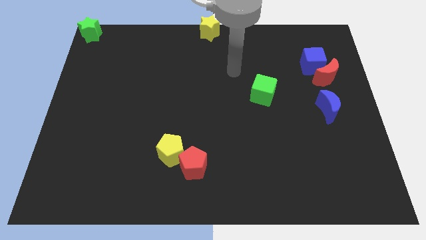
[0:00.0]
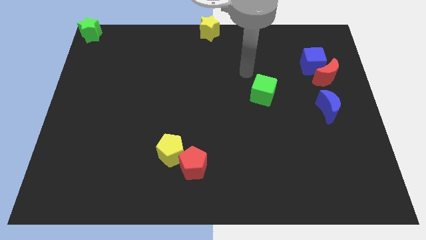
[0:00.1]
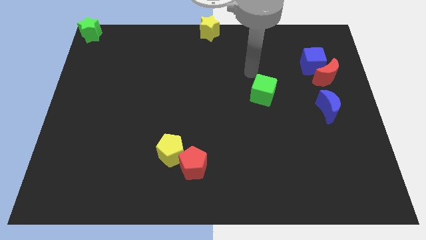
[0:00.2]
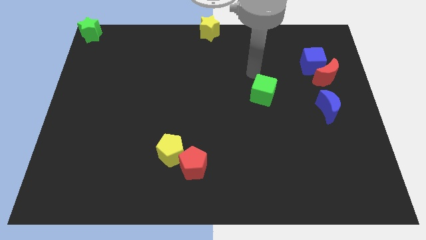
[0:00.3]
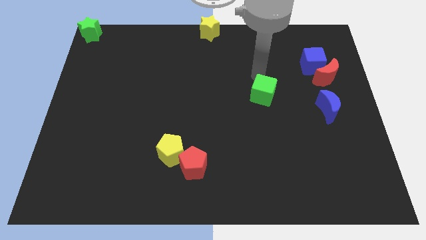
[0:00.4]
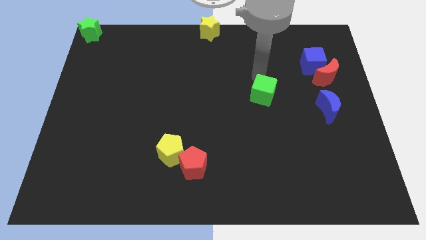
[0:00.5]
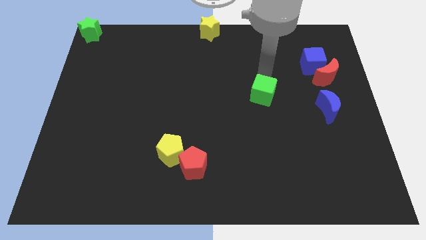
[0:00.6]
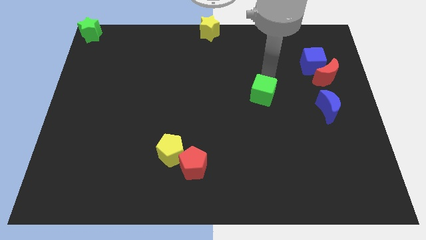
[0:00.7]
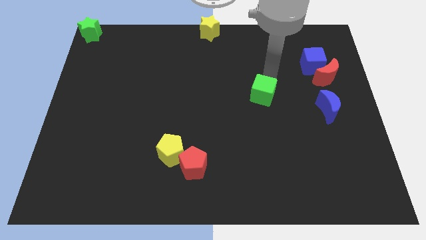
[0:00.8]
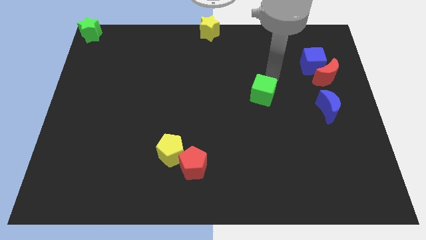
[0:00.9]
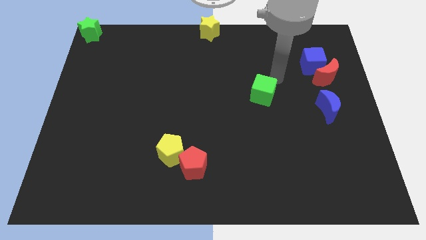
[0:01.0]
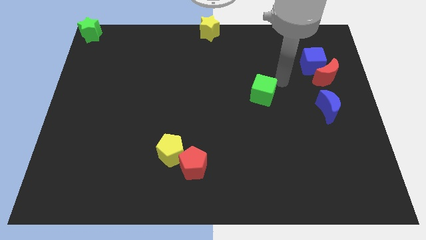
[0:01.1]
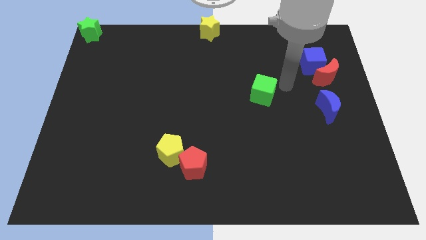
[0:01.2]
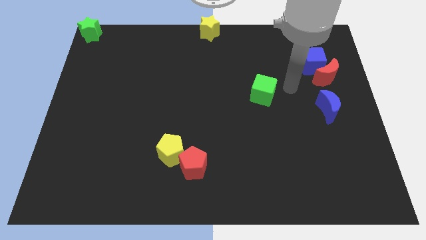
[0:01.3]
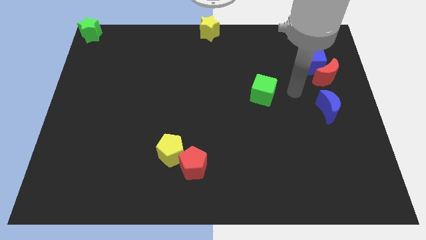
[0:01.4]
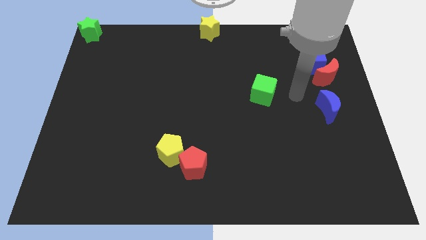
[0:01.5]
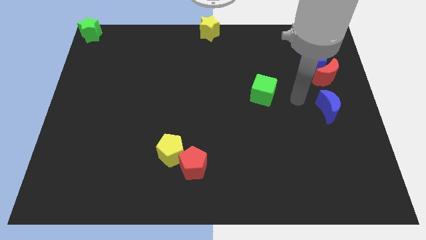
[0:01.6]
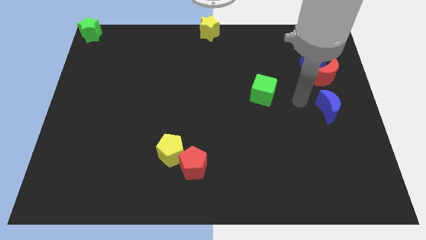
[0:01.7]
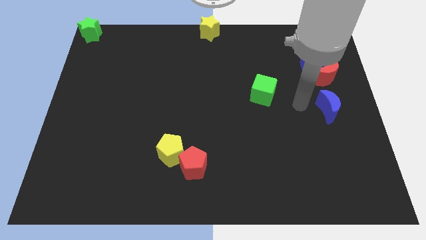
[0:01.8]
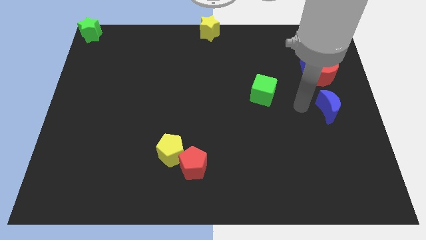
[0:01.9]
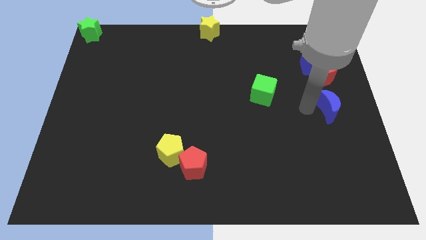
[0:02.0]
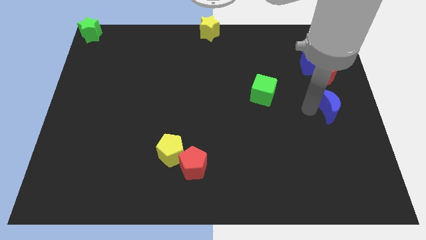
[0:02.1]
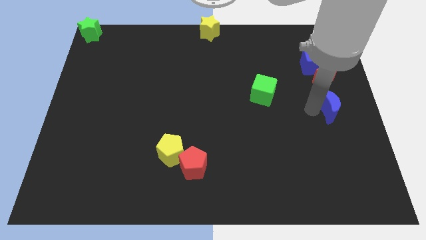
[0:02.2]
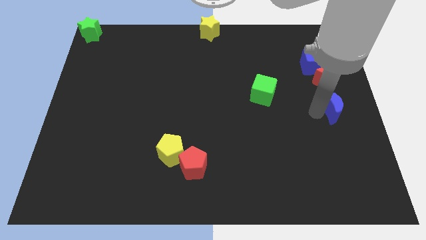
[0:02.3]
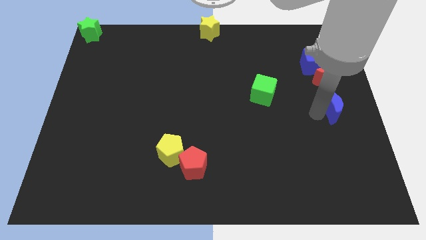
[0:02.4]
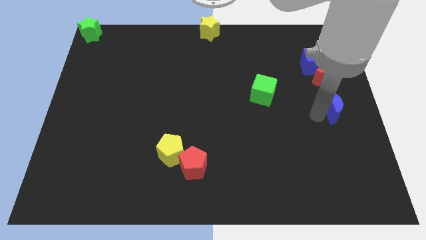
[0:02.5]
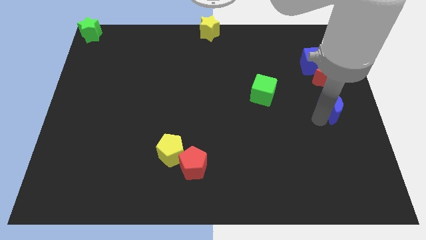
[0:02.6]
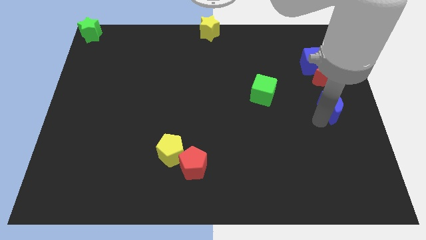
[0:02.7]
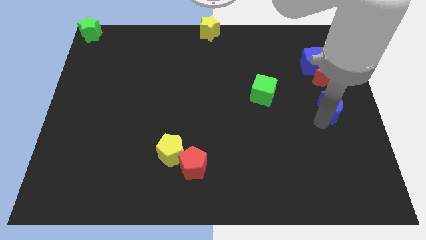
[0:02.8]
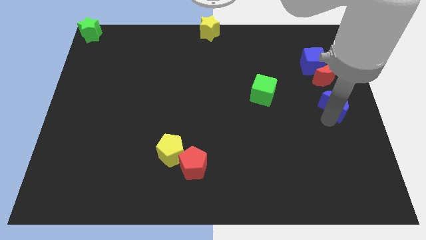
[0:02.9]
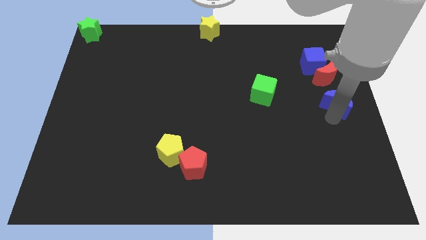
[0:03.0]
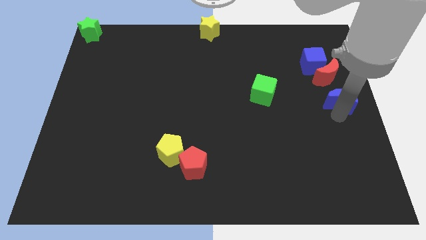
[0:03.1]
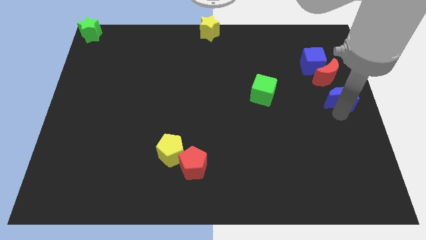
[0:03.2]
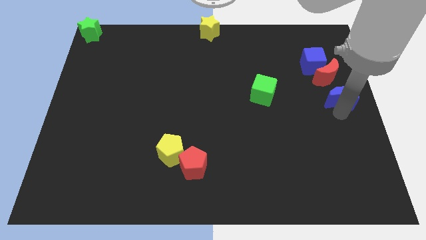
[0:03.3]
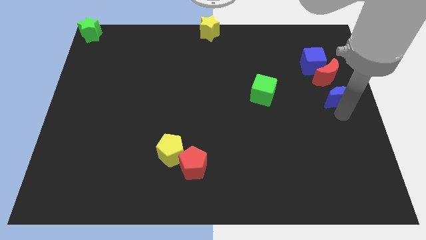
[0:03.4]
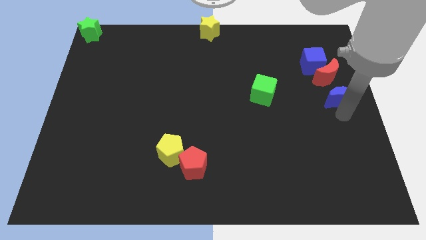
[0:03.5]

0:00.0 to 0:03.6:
push blue moon slightly to the right center

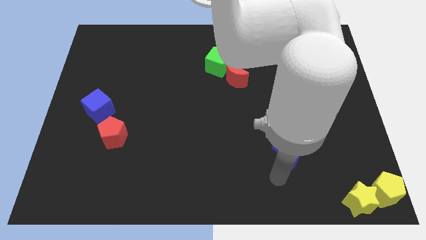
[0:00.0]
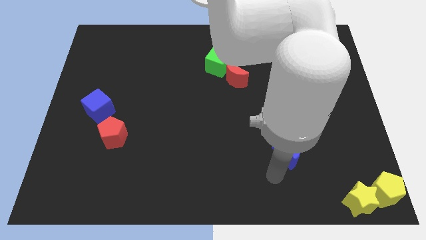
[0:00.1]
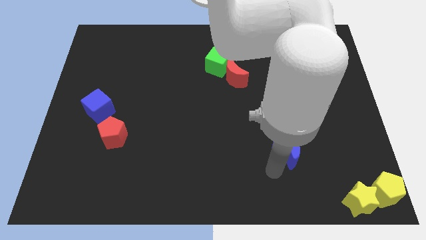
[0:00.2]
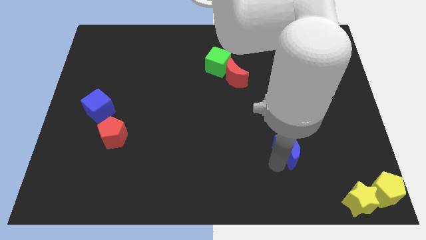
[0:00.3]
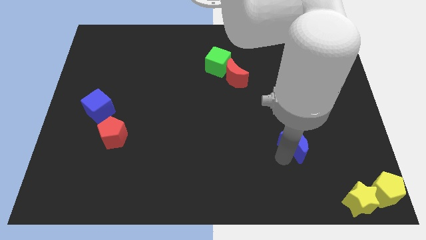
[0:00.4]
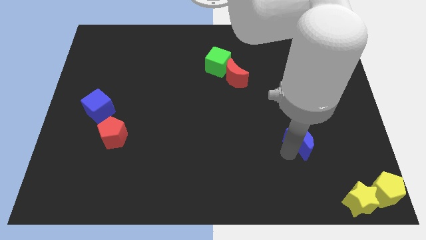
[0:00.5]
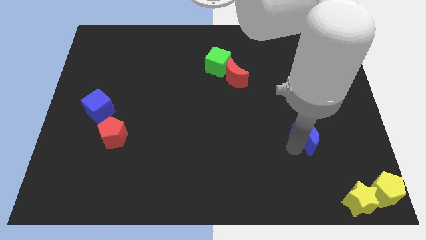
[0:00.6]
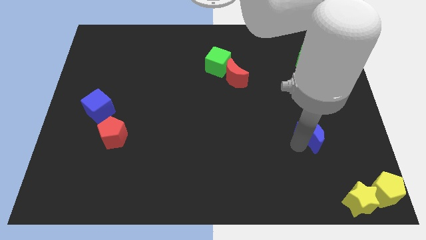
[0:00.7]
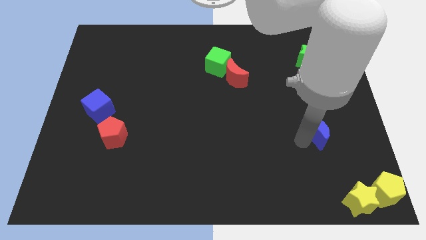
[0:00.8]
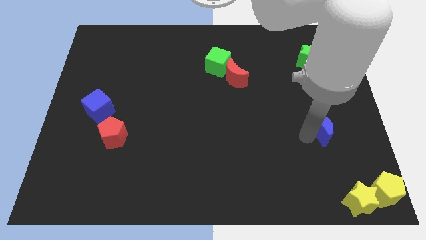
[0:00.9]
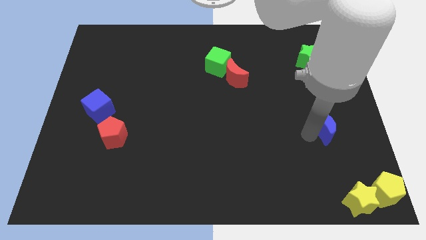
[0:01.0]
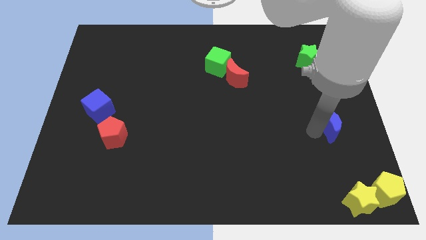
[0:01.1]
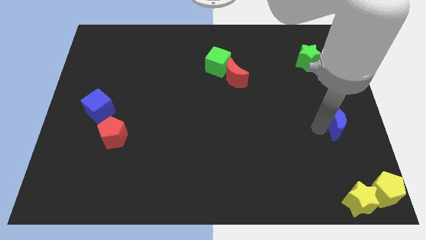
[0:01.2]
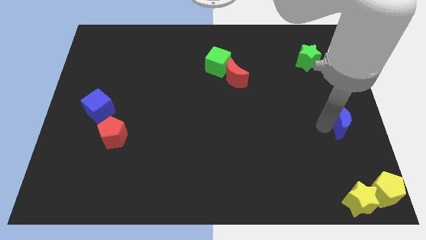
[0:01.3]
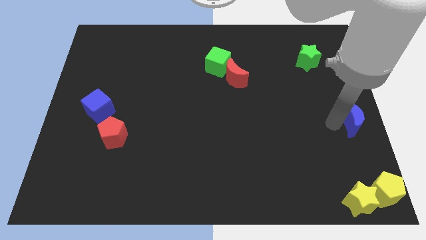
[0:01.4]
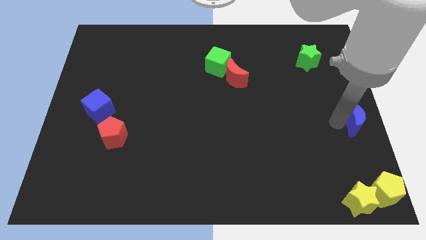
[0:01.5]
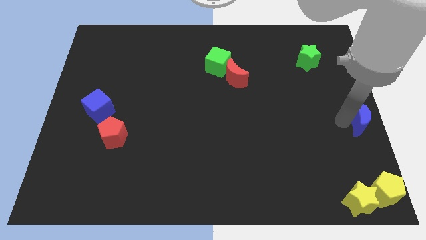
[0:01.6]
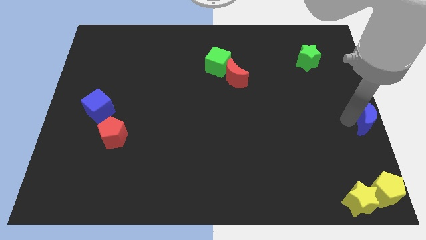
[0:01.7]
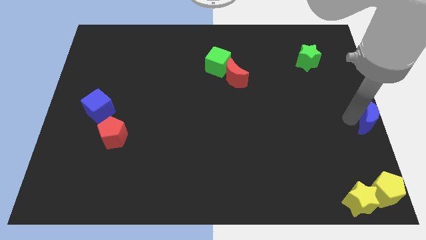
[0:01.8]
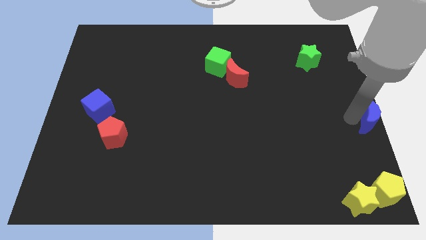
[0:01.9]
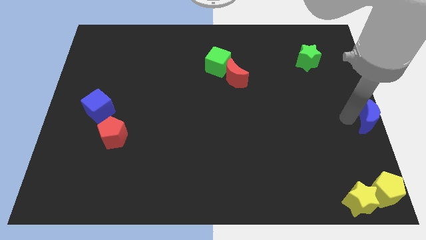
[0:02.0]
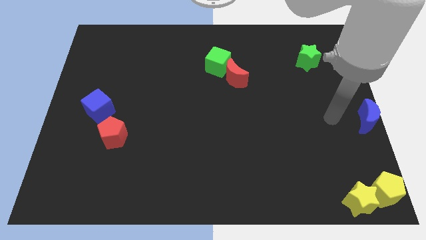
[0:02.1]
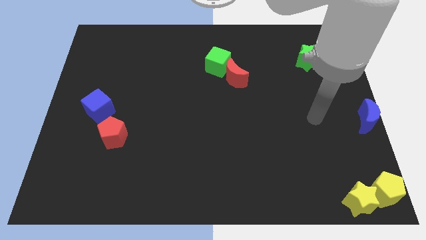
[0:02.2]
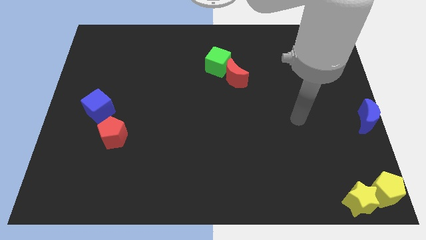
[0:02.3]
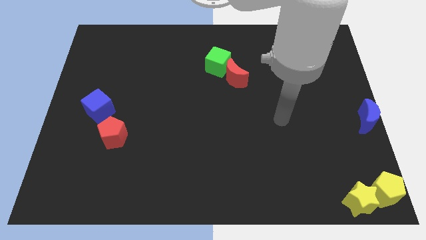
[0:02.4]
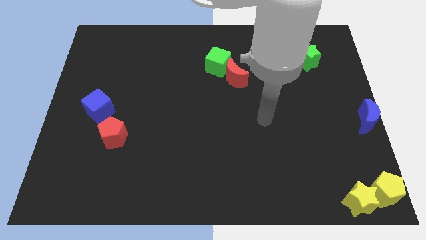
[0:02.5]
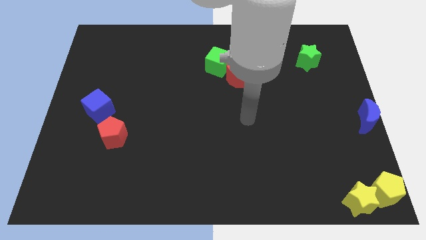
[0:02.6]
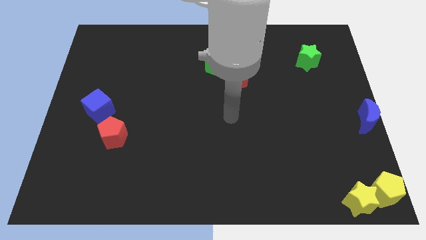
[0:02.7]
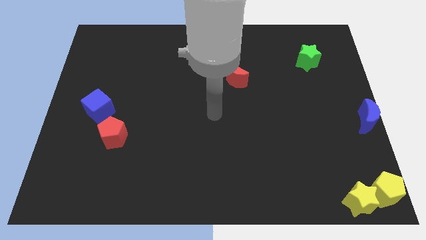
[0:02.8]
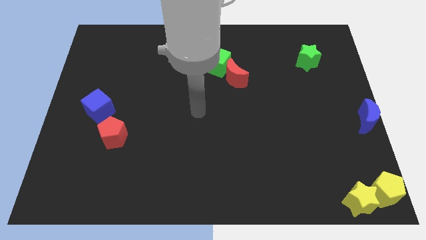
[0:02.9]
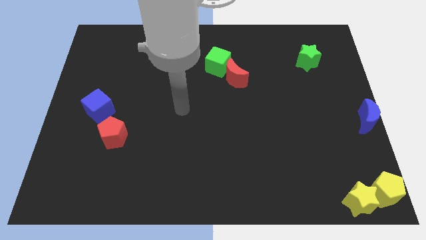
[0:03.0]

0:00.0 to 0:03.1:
push the blue moon towards the right center of the board

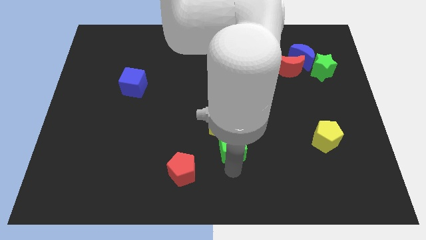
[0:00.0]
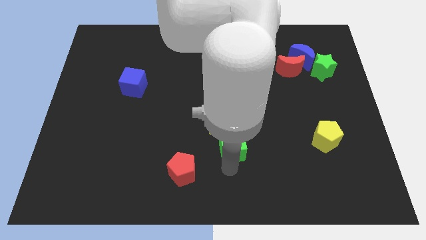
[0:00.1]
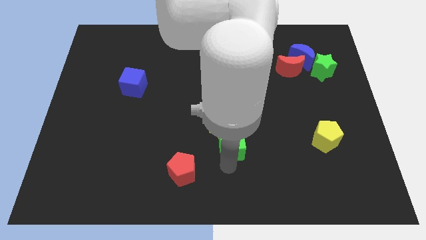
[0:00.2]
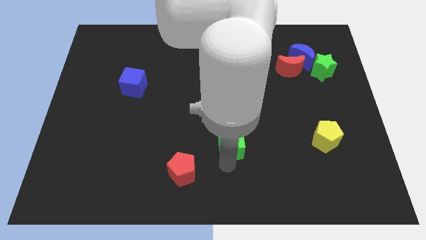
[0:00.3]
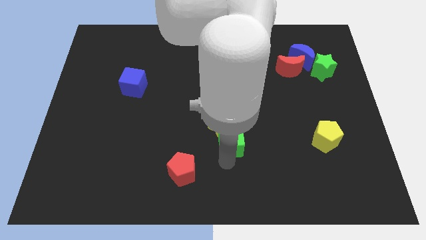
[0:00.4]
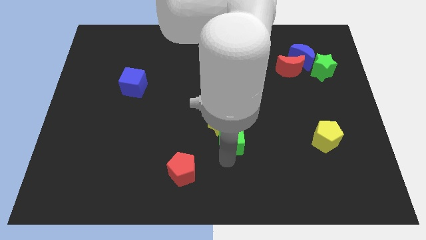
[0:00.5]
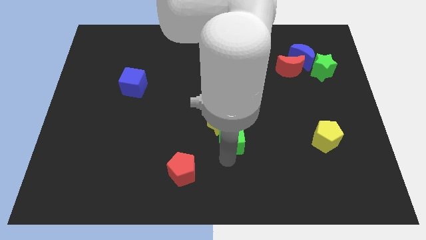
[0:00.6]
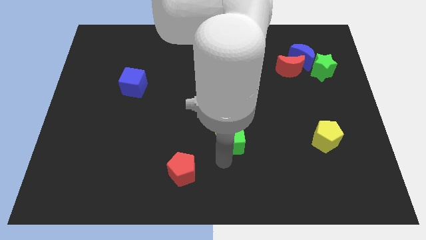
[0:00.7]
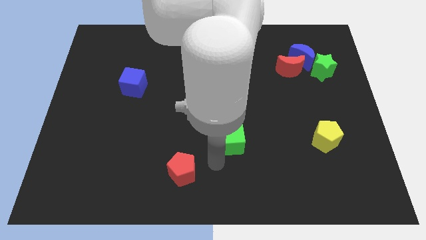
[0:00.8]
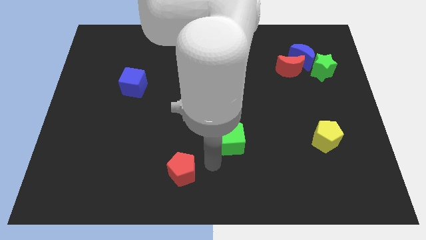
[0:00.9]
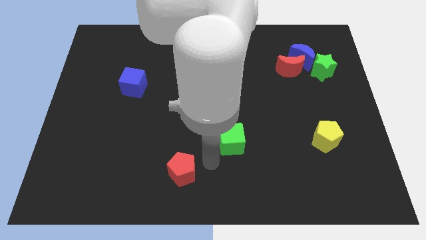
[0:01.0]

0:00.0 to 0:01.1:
push green cube into the yellow star

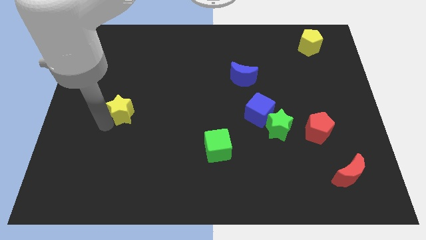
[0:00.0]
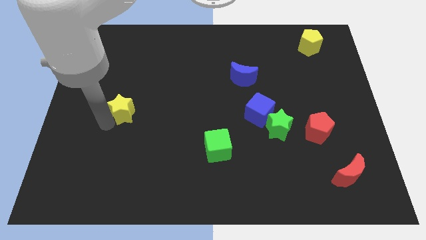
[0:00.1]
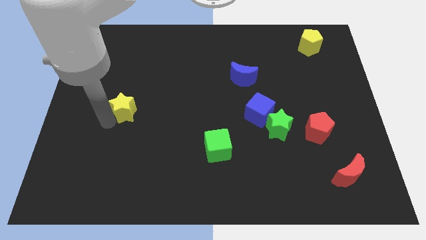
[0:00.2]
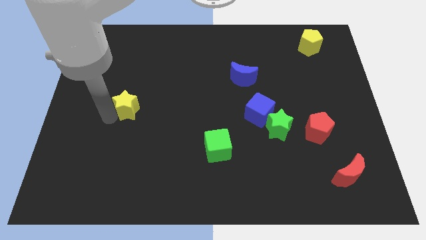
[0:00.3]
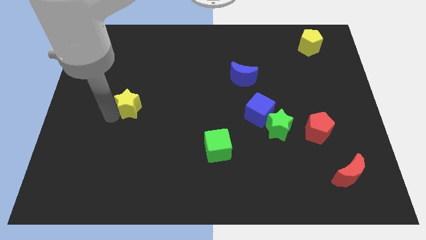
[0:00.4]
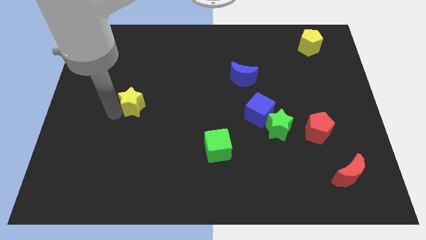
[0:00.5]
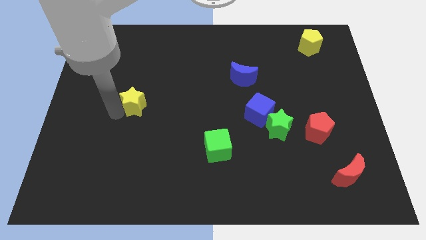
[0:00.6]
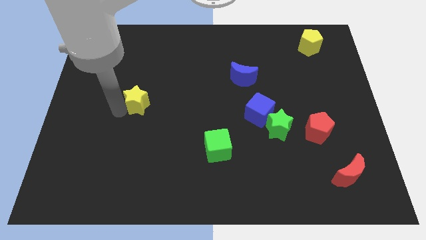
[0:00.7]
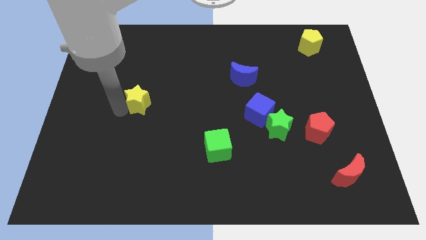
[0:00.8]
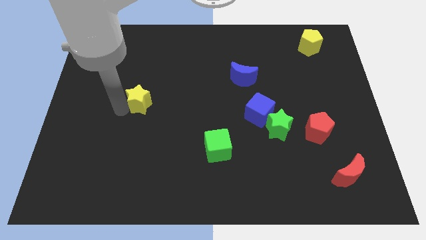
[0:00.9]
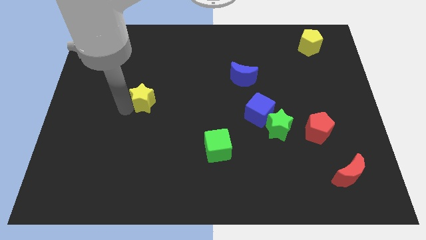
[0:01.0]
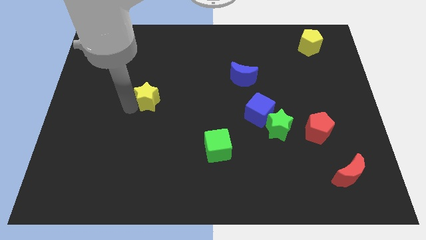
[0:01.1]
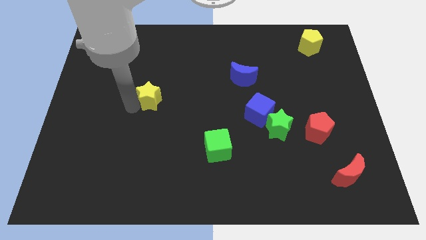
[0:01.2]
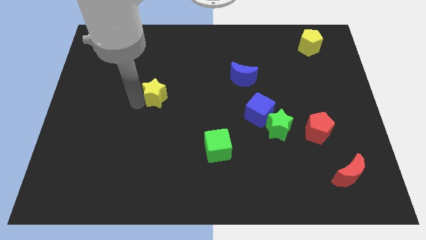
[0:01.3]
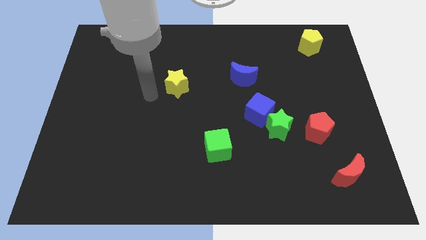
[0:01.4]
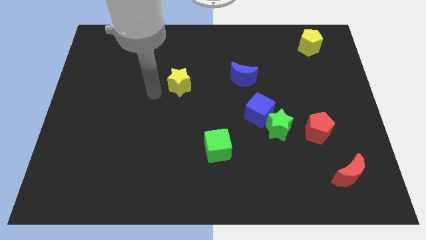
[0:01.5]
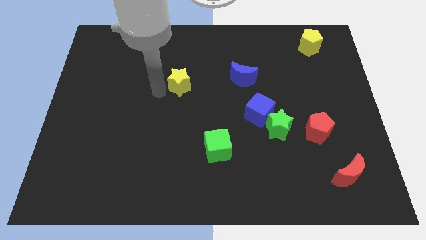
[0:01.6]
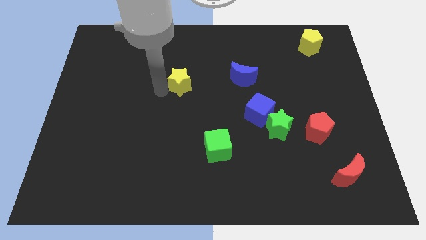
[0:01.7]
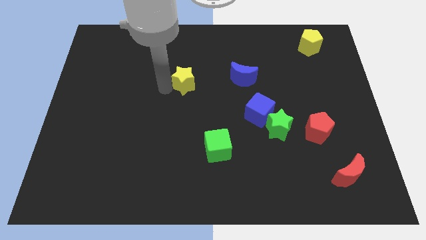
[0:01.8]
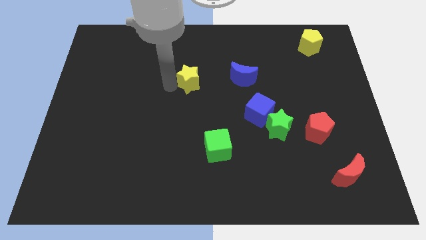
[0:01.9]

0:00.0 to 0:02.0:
place the yellow star left of the blue moon
